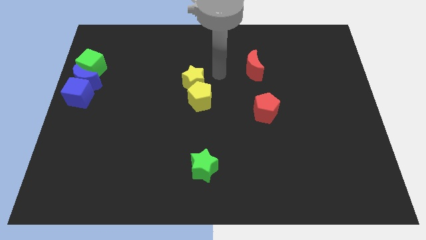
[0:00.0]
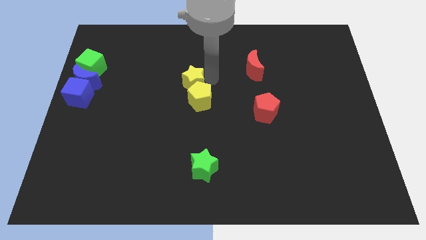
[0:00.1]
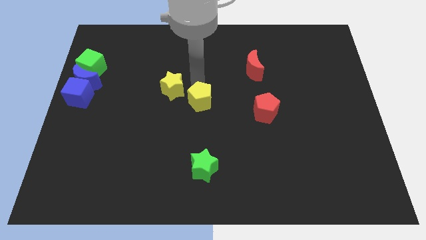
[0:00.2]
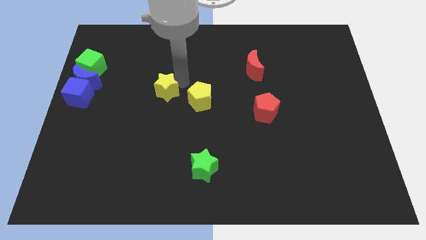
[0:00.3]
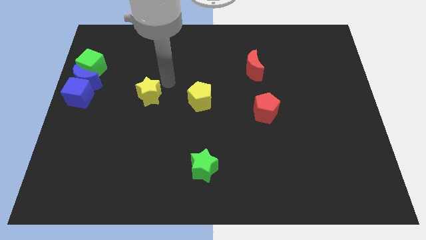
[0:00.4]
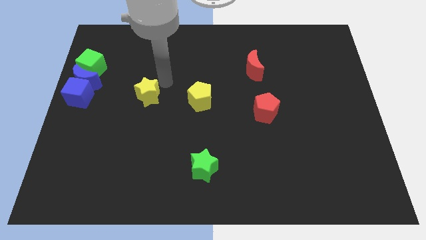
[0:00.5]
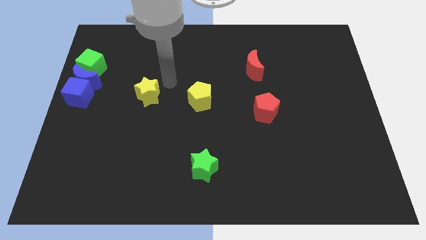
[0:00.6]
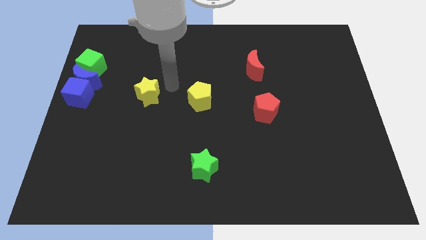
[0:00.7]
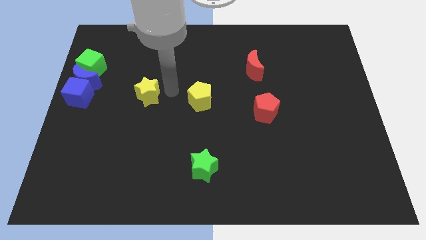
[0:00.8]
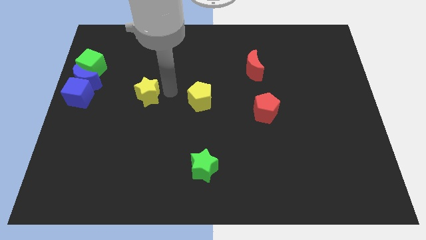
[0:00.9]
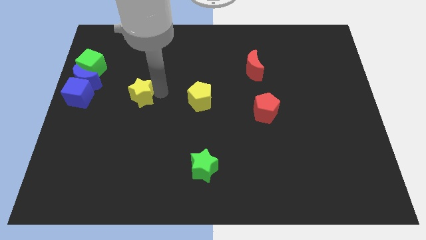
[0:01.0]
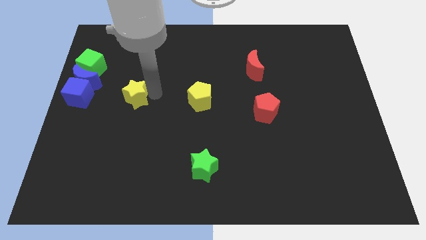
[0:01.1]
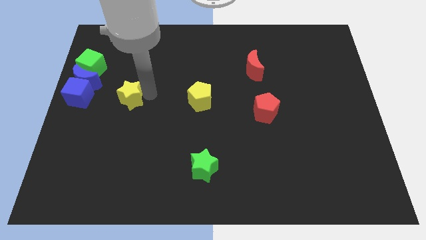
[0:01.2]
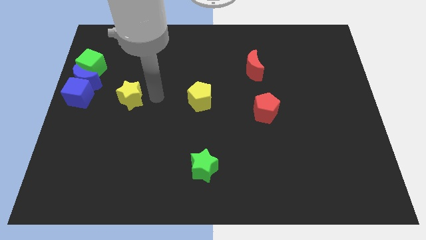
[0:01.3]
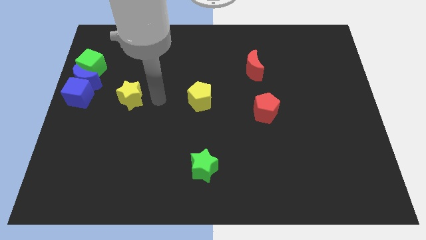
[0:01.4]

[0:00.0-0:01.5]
separate yellow star from the yellow pentagon

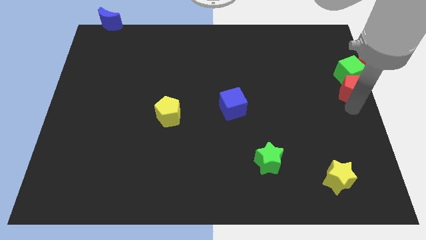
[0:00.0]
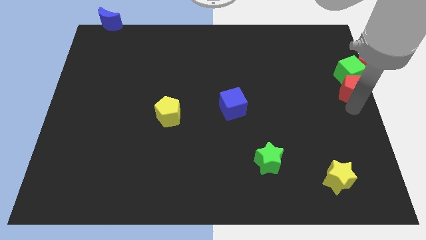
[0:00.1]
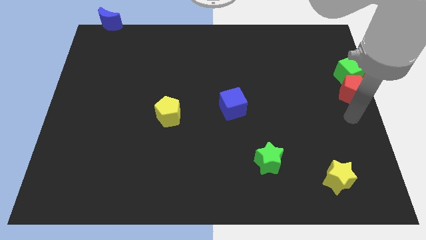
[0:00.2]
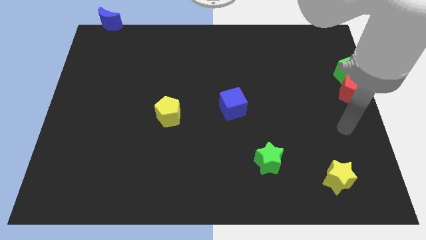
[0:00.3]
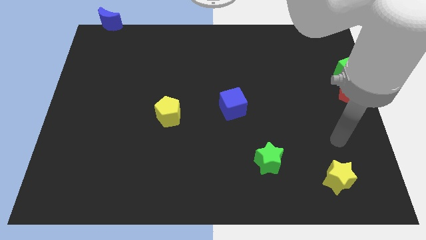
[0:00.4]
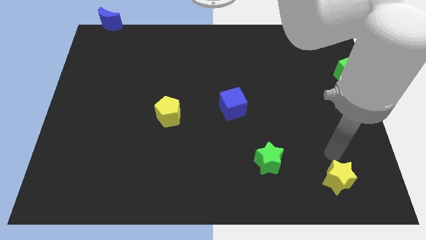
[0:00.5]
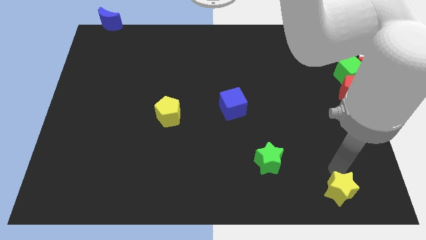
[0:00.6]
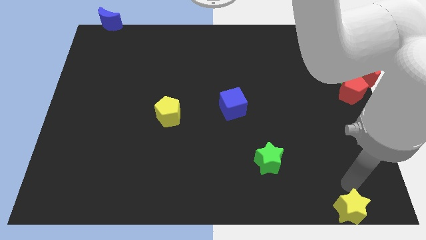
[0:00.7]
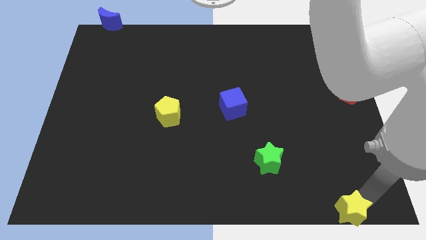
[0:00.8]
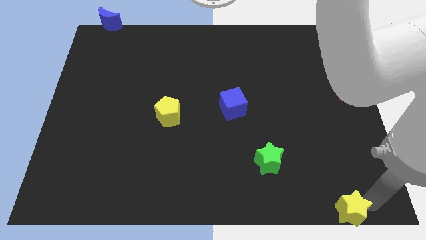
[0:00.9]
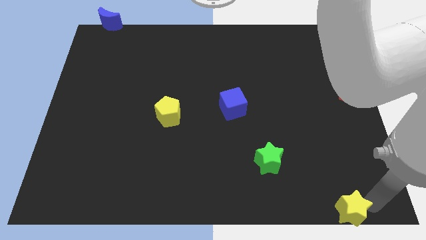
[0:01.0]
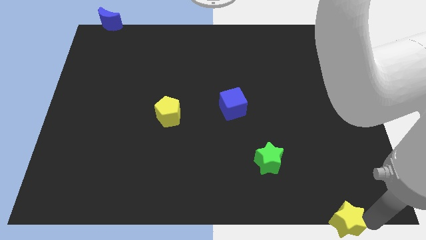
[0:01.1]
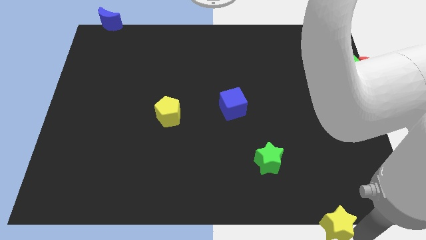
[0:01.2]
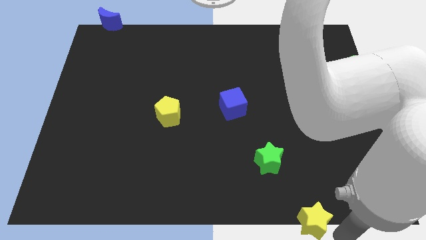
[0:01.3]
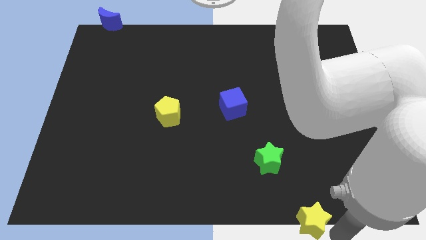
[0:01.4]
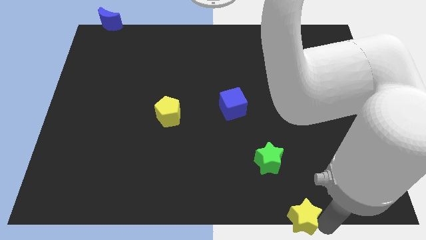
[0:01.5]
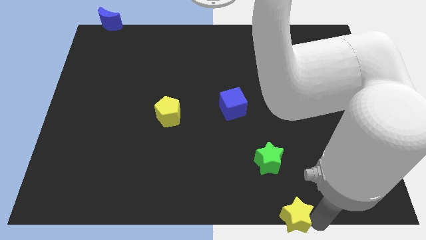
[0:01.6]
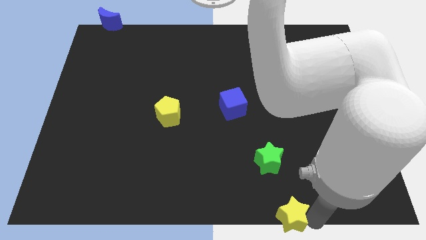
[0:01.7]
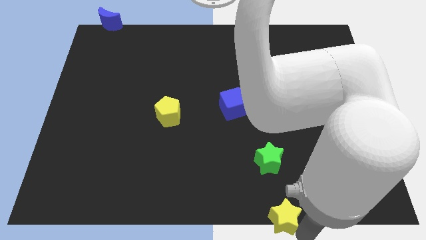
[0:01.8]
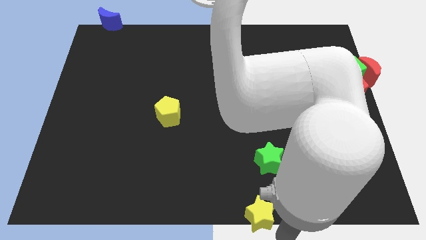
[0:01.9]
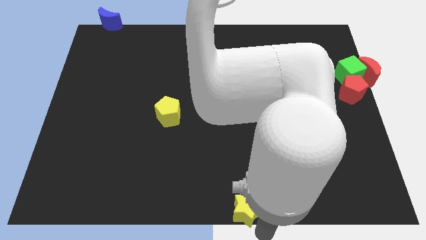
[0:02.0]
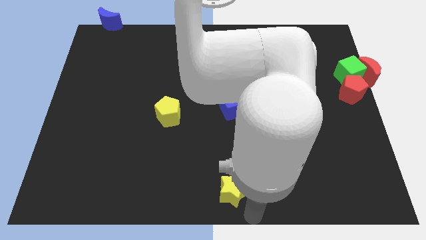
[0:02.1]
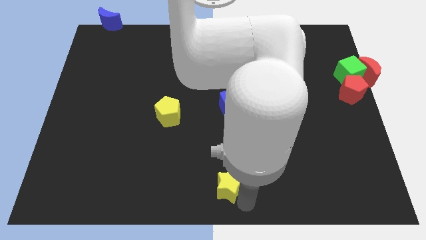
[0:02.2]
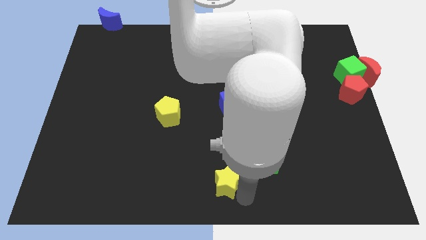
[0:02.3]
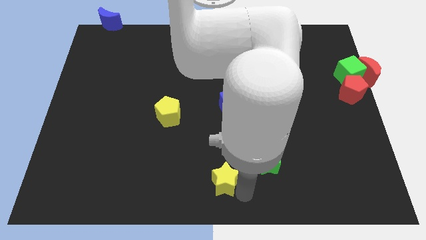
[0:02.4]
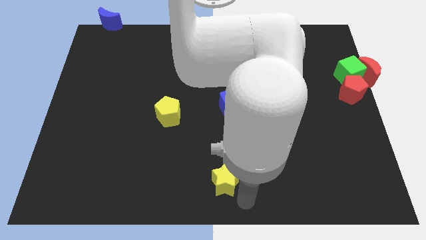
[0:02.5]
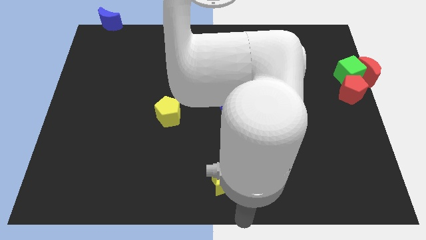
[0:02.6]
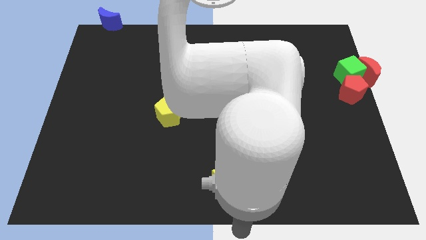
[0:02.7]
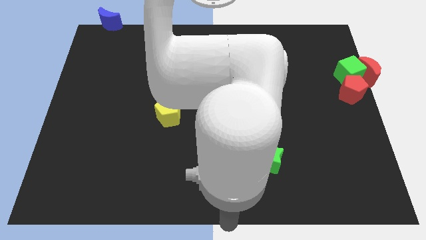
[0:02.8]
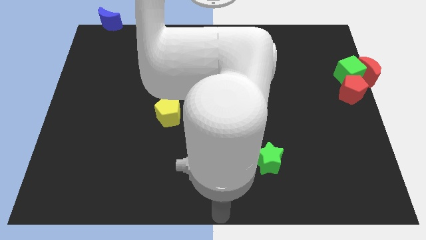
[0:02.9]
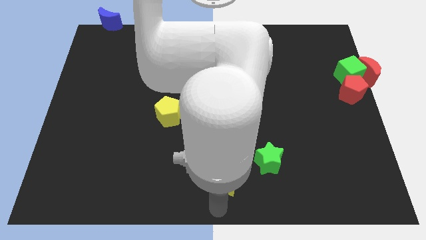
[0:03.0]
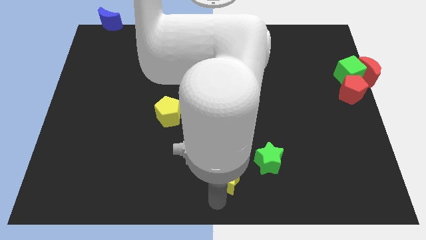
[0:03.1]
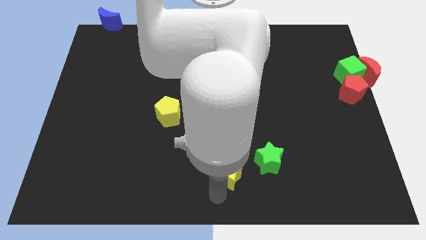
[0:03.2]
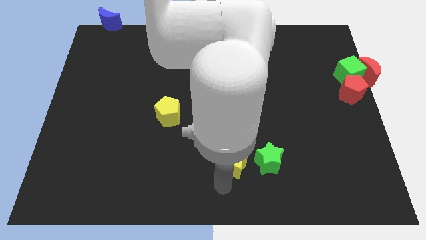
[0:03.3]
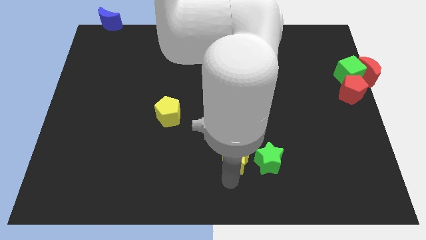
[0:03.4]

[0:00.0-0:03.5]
slide the yellow star parallel to the left of the green star

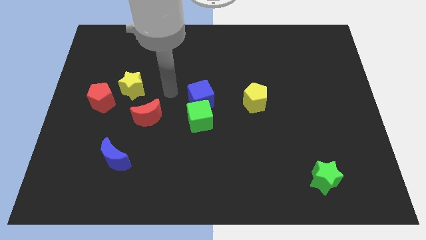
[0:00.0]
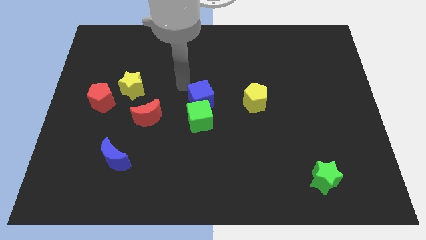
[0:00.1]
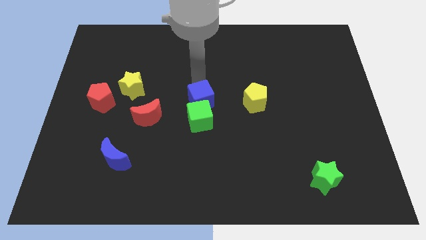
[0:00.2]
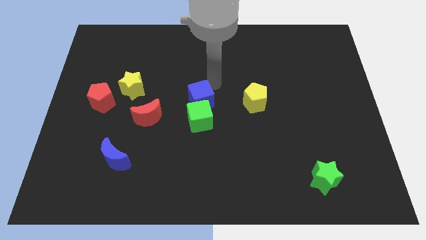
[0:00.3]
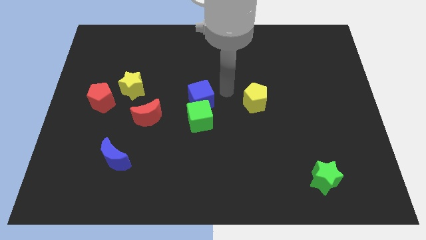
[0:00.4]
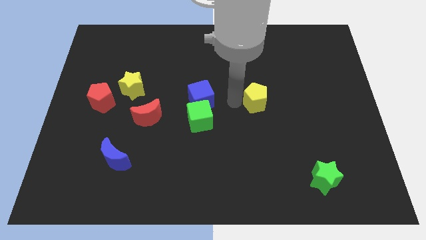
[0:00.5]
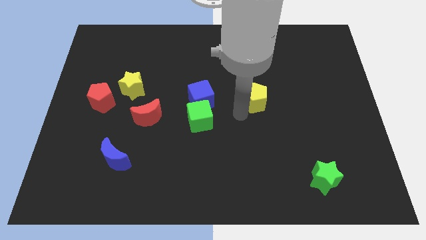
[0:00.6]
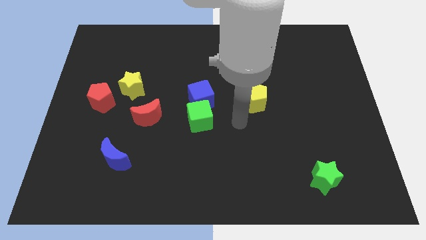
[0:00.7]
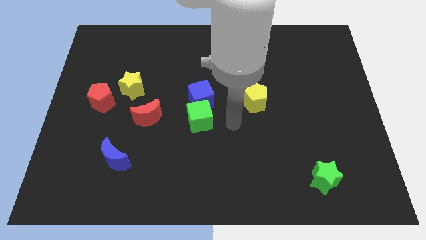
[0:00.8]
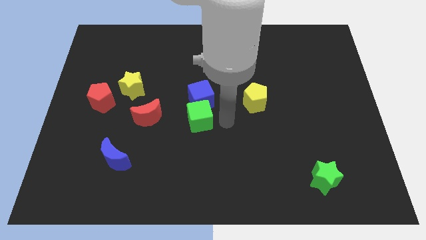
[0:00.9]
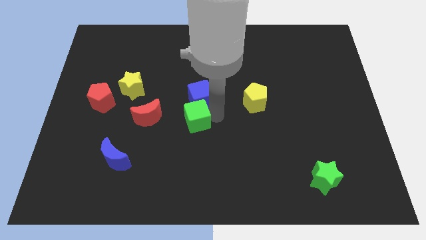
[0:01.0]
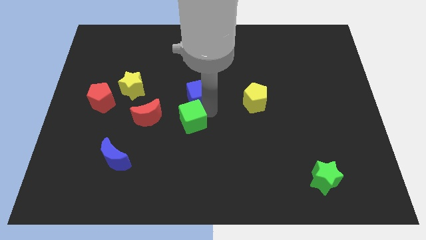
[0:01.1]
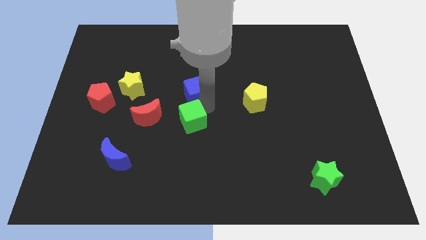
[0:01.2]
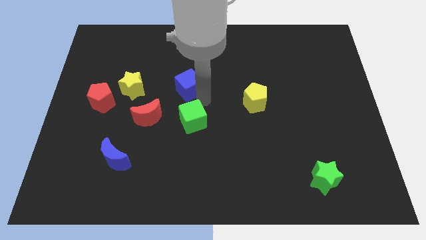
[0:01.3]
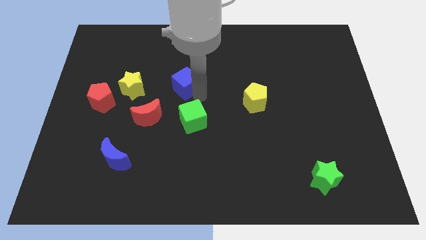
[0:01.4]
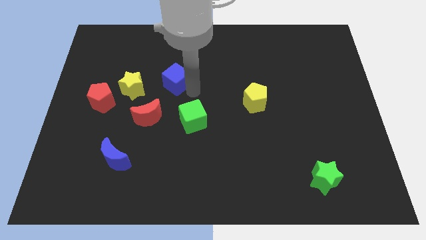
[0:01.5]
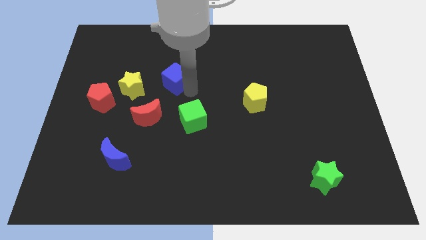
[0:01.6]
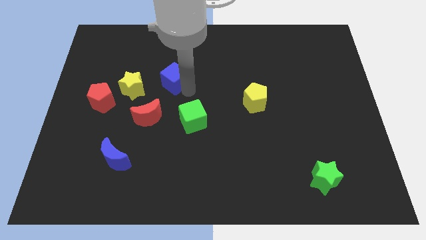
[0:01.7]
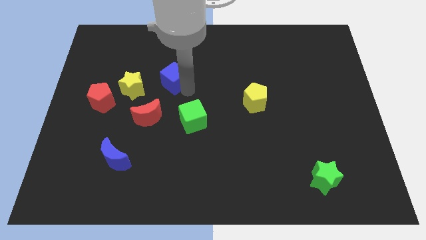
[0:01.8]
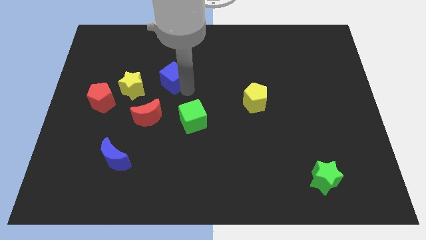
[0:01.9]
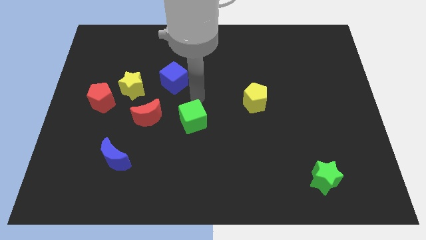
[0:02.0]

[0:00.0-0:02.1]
separate the green cube and blue cube

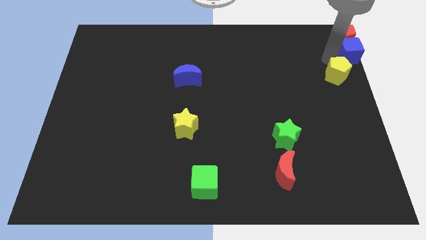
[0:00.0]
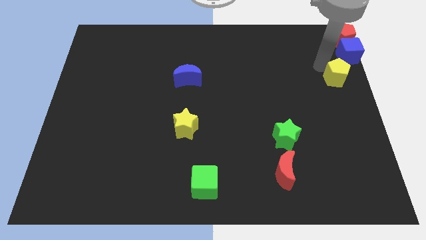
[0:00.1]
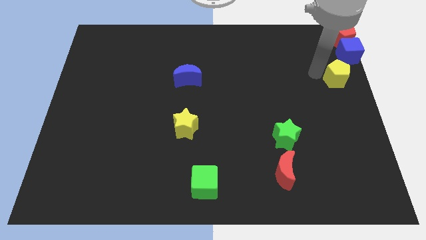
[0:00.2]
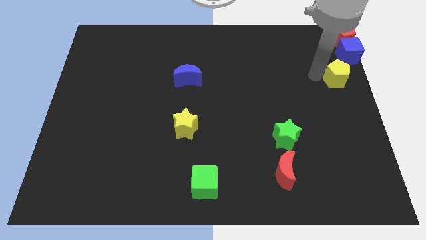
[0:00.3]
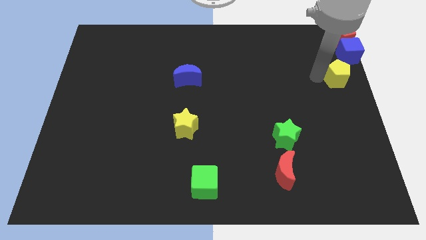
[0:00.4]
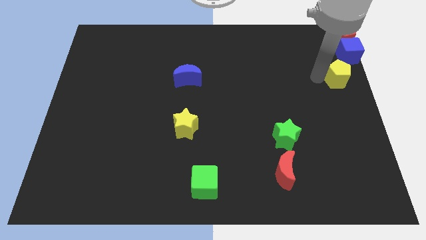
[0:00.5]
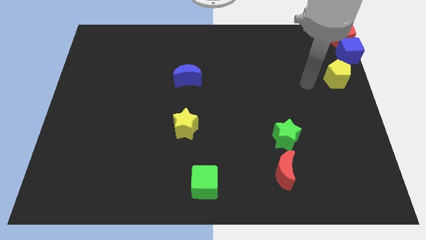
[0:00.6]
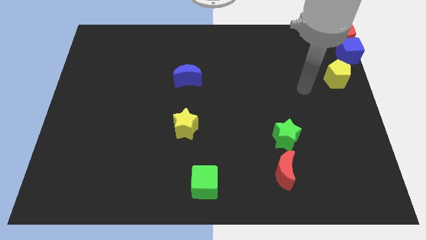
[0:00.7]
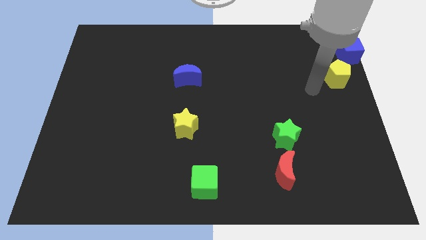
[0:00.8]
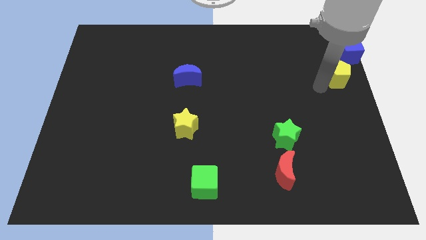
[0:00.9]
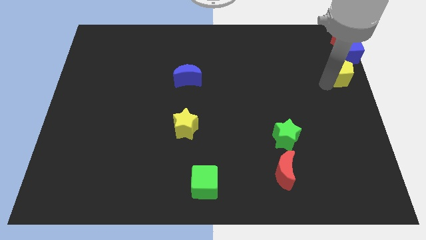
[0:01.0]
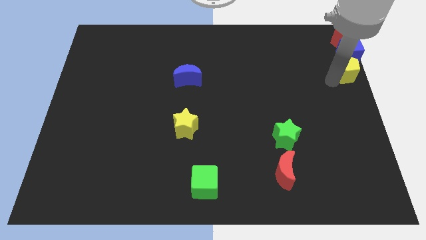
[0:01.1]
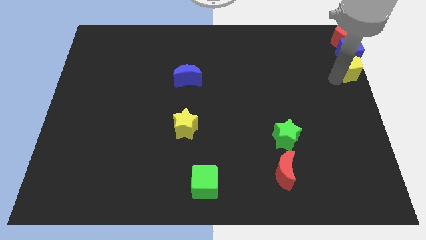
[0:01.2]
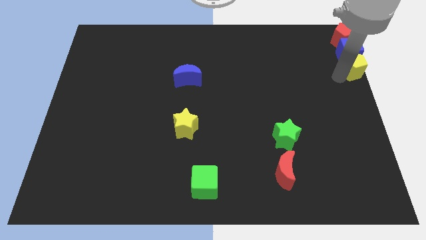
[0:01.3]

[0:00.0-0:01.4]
push yellow pentagon into the blue cube and red pentagon

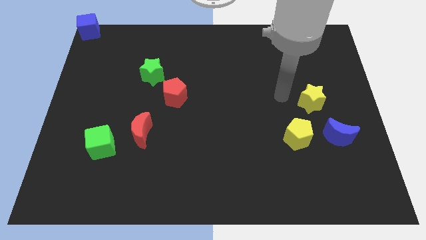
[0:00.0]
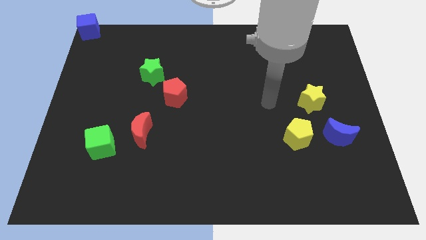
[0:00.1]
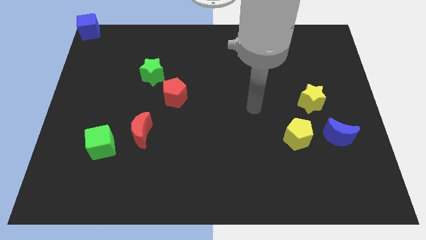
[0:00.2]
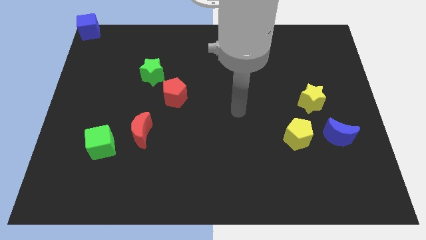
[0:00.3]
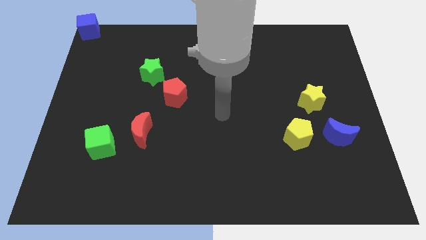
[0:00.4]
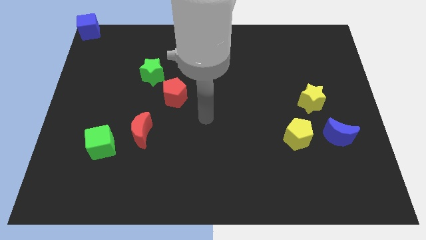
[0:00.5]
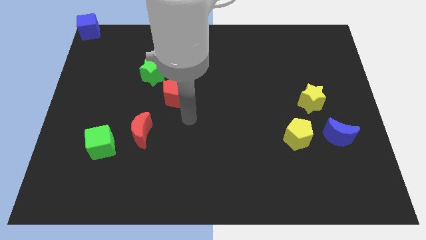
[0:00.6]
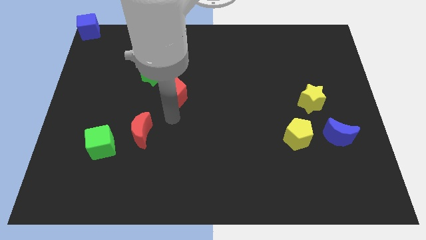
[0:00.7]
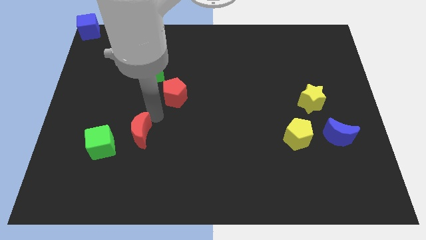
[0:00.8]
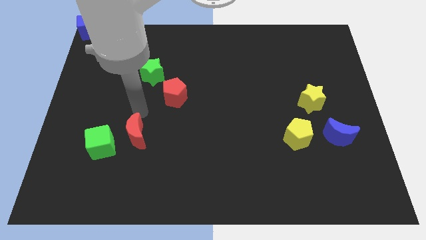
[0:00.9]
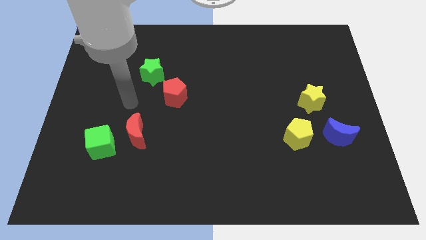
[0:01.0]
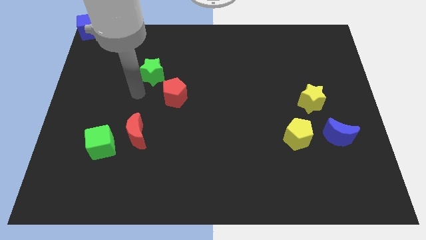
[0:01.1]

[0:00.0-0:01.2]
push your hand in between the green star and green cube
